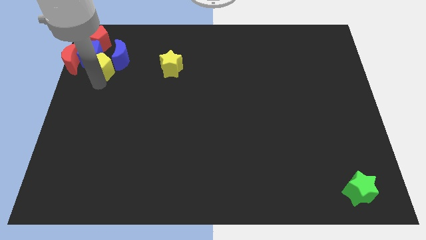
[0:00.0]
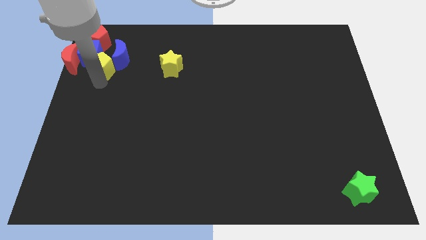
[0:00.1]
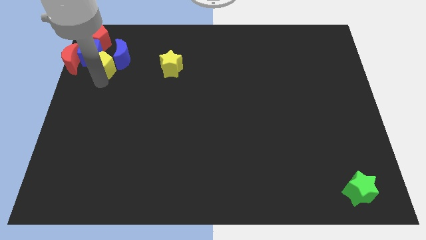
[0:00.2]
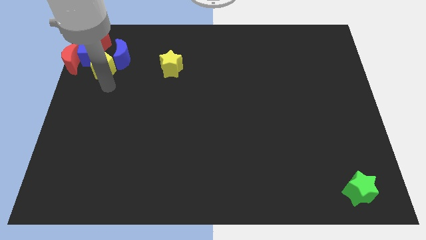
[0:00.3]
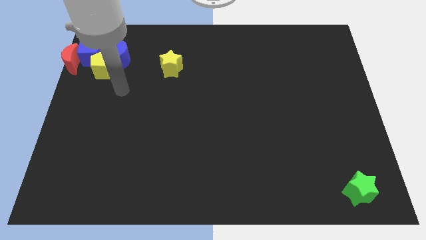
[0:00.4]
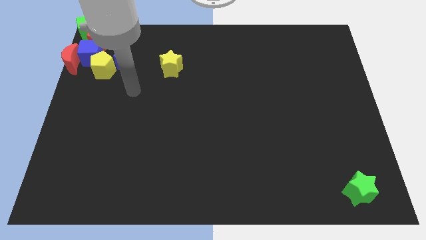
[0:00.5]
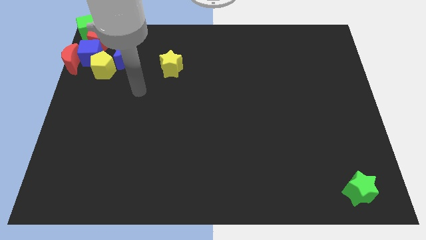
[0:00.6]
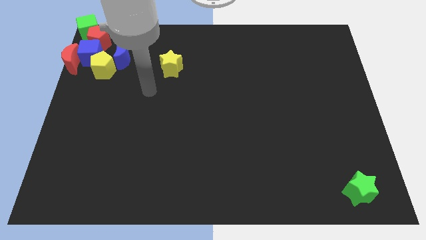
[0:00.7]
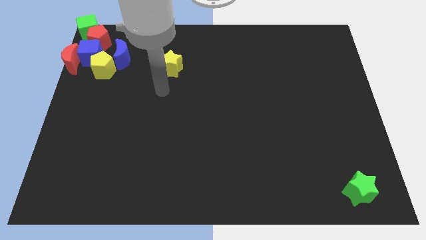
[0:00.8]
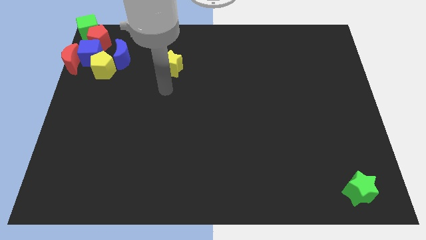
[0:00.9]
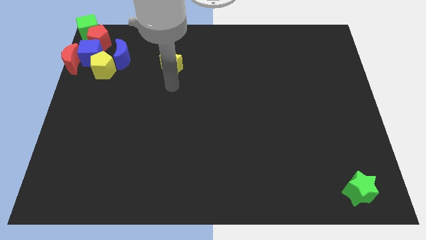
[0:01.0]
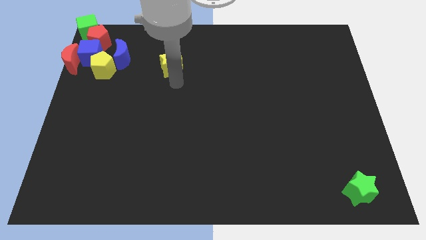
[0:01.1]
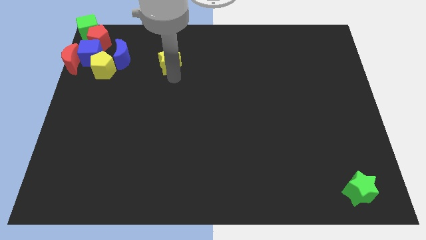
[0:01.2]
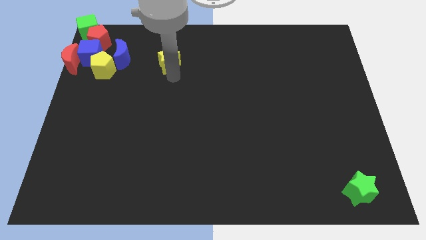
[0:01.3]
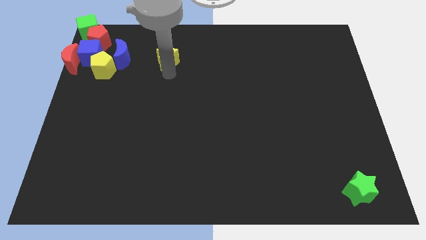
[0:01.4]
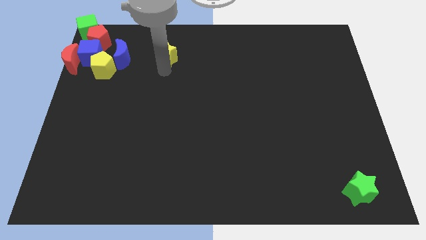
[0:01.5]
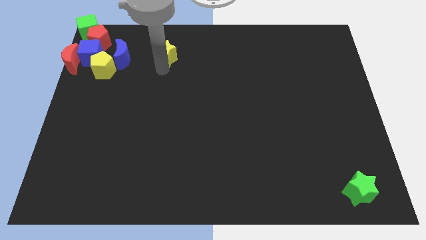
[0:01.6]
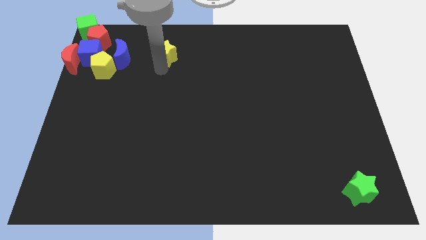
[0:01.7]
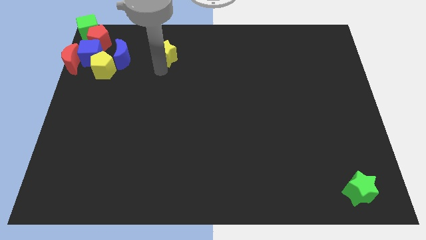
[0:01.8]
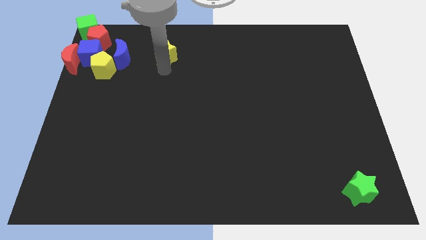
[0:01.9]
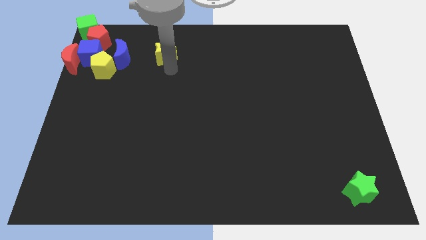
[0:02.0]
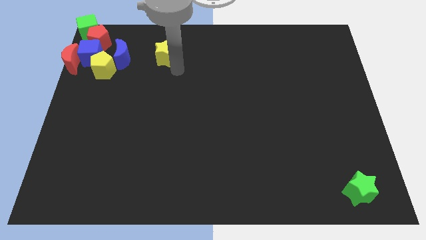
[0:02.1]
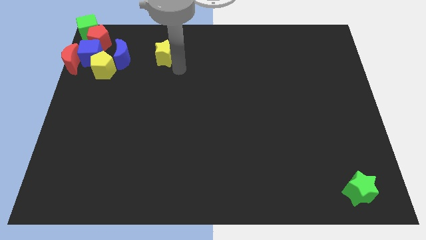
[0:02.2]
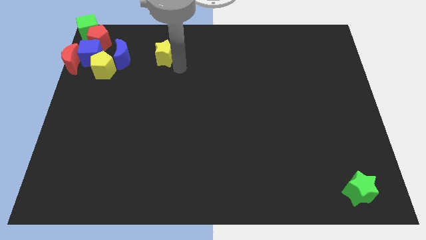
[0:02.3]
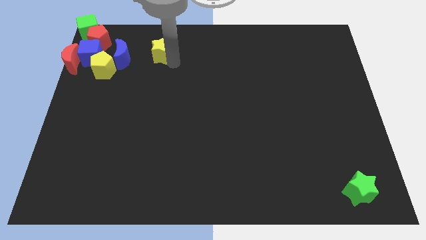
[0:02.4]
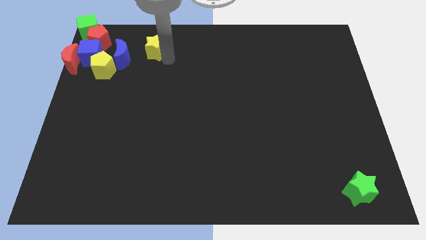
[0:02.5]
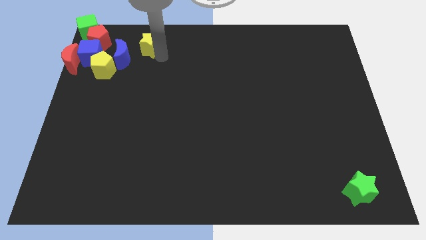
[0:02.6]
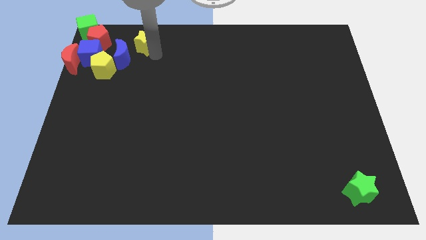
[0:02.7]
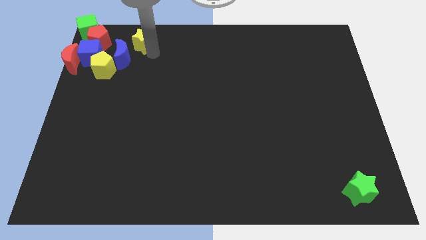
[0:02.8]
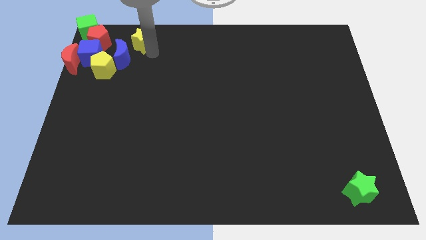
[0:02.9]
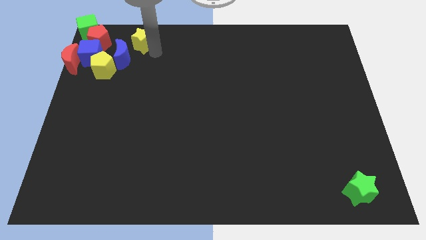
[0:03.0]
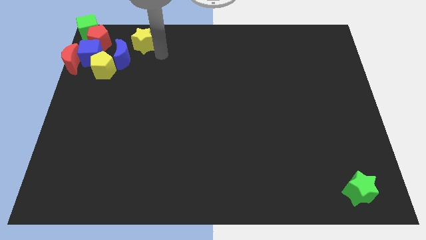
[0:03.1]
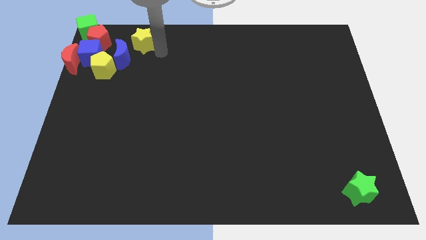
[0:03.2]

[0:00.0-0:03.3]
move the yellow star close to the blue moon

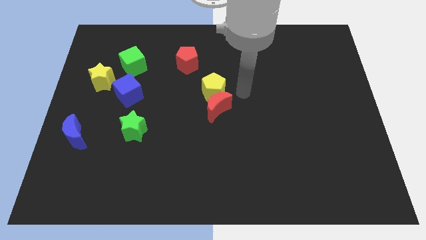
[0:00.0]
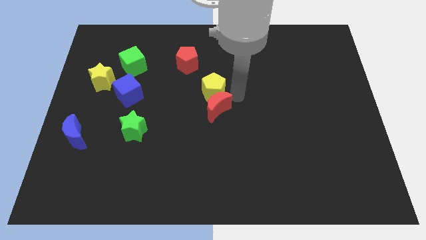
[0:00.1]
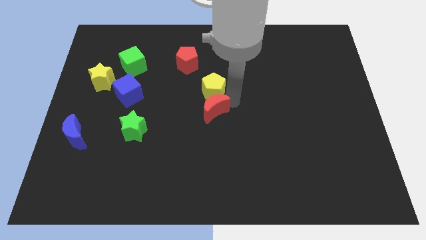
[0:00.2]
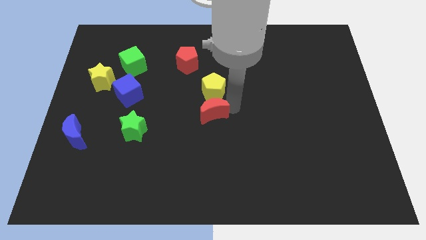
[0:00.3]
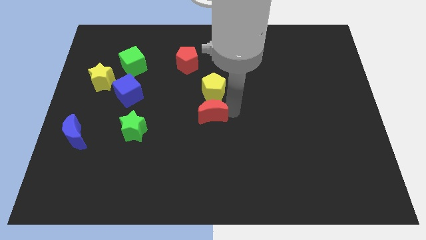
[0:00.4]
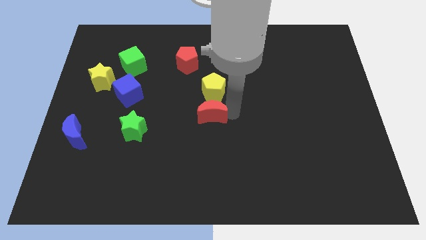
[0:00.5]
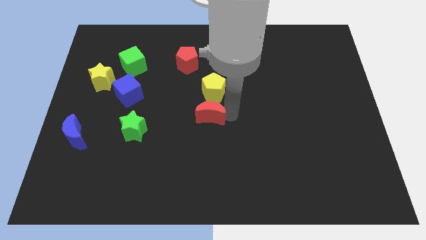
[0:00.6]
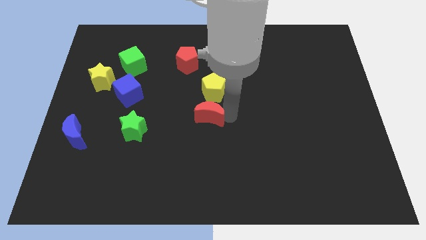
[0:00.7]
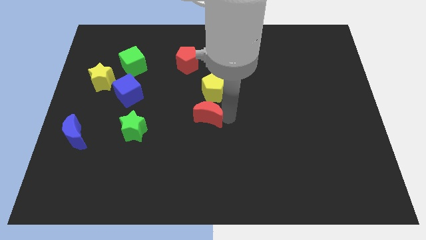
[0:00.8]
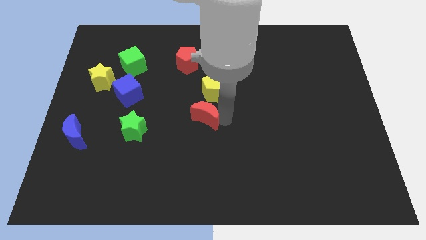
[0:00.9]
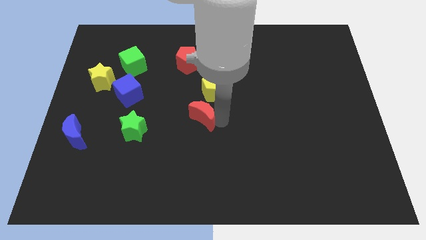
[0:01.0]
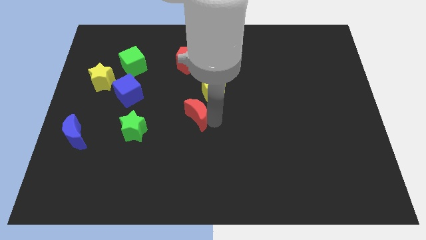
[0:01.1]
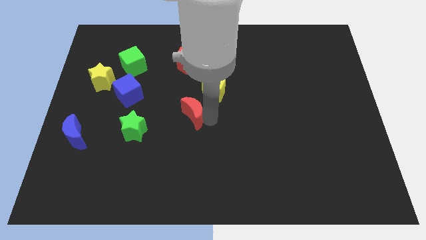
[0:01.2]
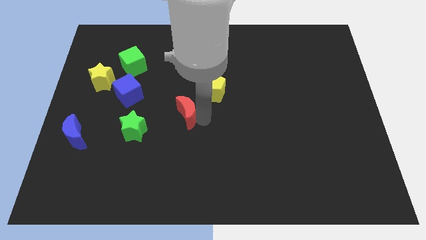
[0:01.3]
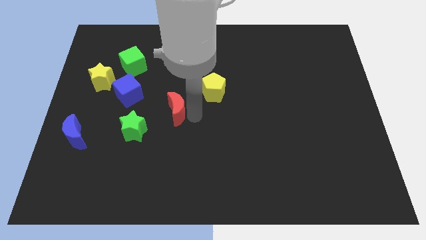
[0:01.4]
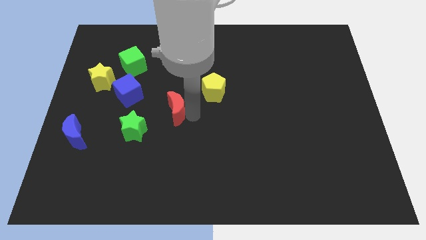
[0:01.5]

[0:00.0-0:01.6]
push the red crescent towards the green star

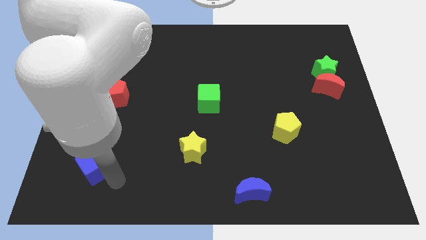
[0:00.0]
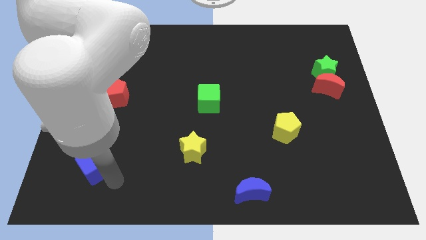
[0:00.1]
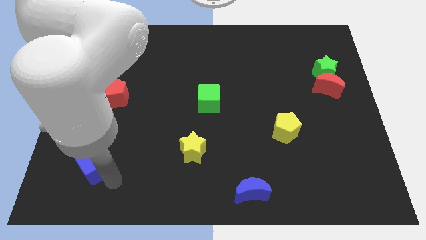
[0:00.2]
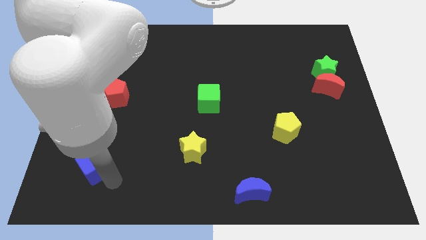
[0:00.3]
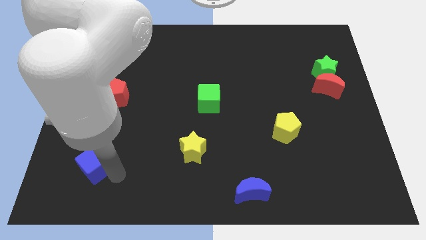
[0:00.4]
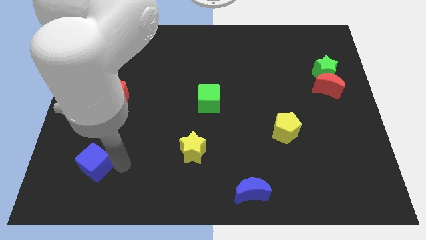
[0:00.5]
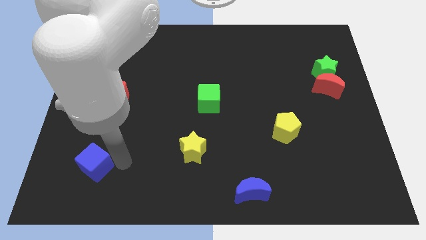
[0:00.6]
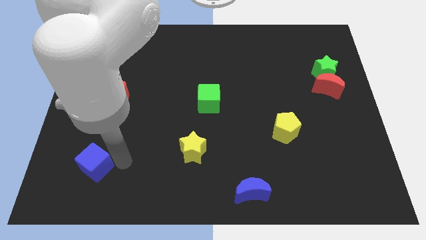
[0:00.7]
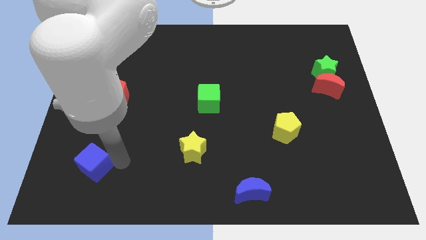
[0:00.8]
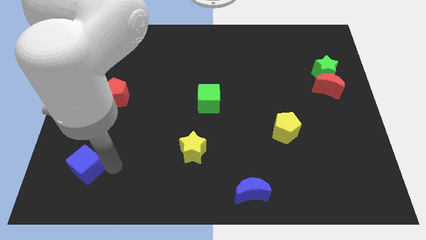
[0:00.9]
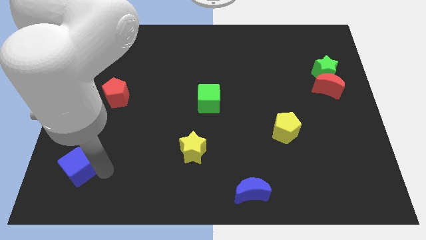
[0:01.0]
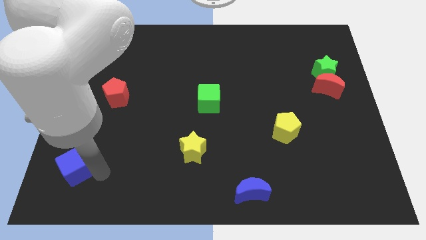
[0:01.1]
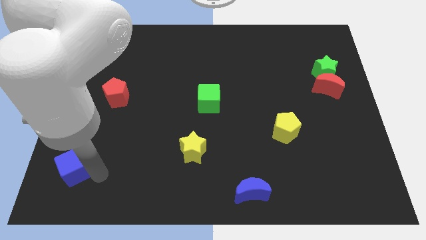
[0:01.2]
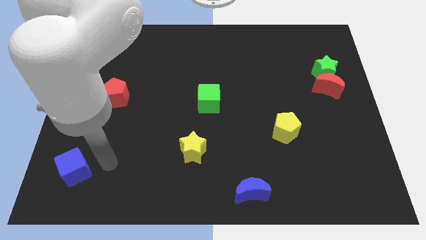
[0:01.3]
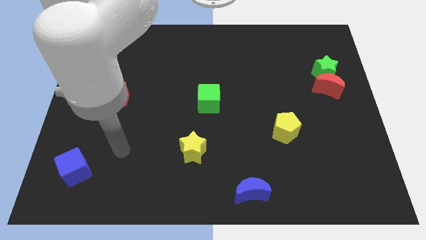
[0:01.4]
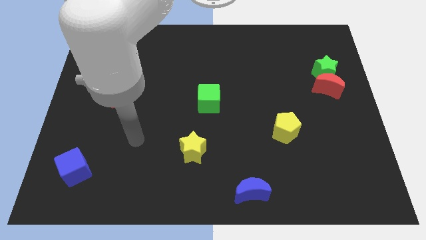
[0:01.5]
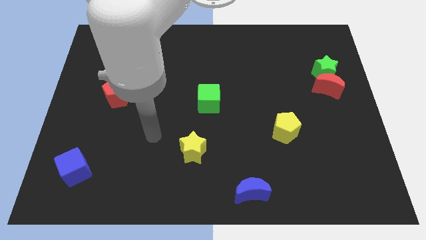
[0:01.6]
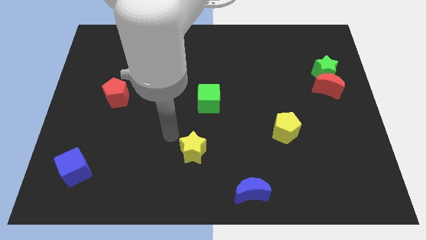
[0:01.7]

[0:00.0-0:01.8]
place the blue square at the bottom left side of the board

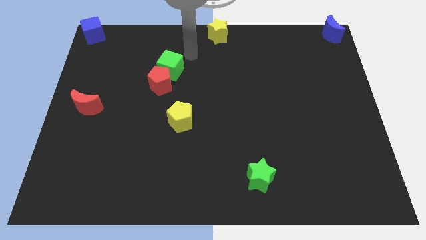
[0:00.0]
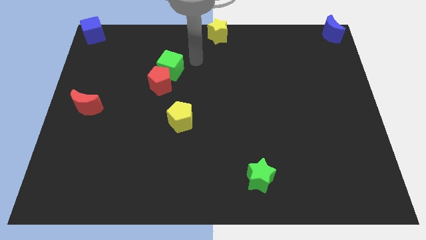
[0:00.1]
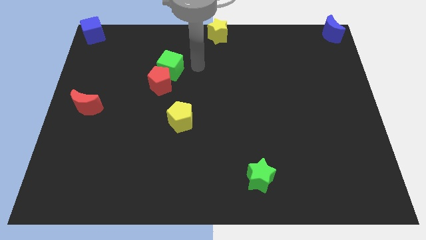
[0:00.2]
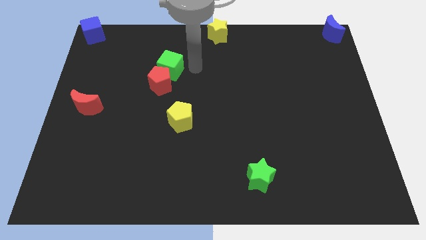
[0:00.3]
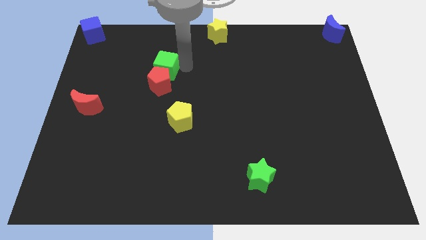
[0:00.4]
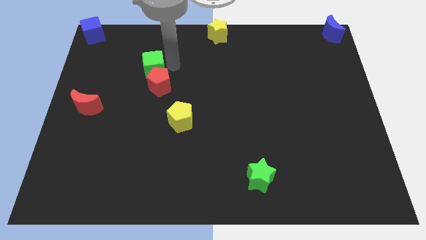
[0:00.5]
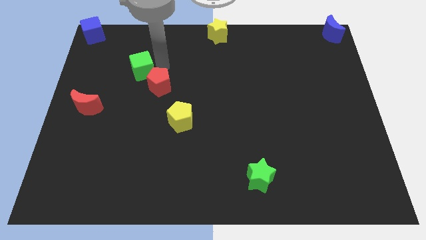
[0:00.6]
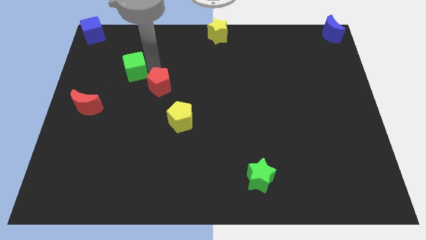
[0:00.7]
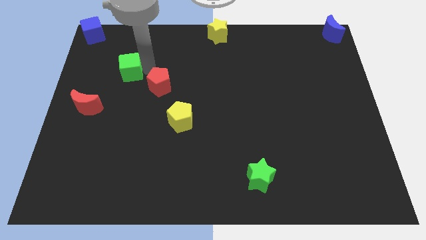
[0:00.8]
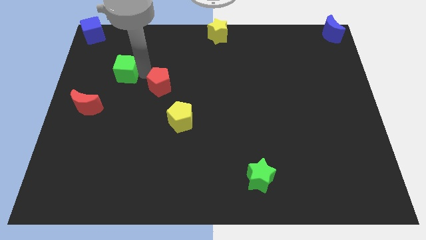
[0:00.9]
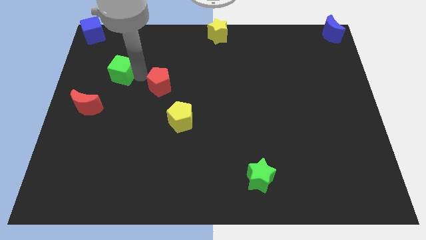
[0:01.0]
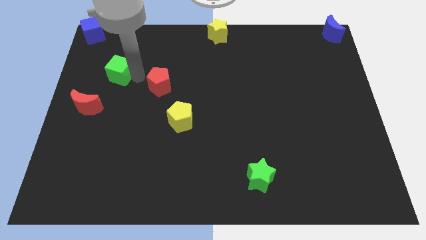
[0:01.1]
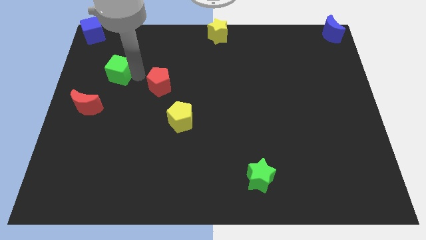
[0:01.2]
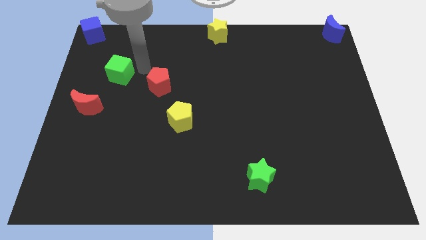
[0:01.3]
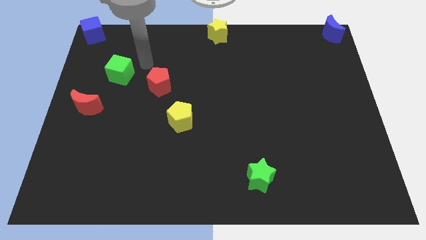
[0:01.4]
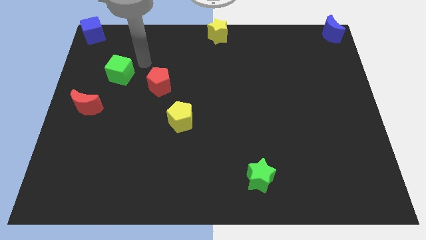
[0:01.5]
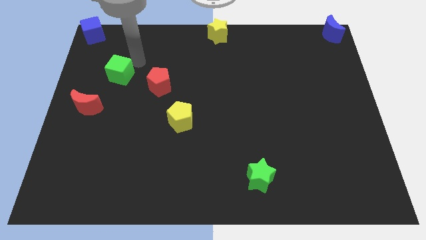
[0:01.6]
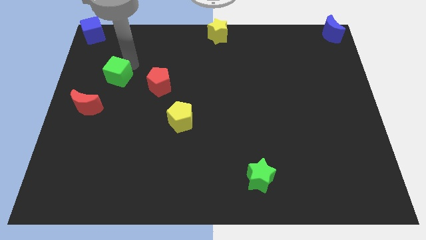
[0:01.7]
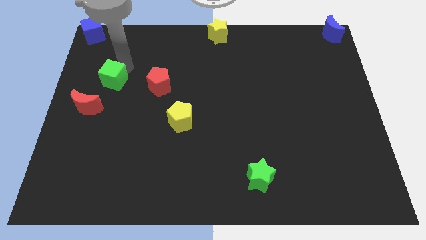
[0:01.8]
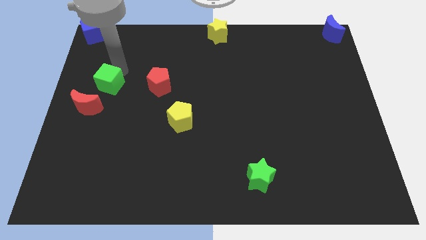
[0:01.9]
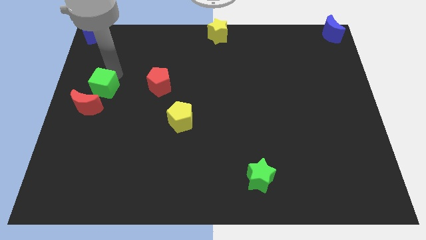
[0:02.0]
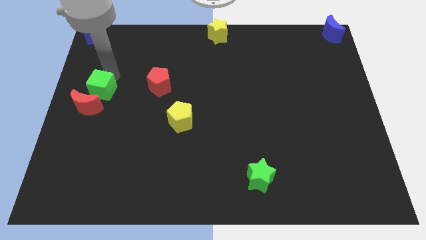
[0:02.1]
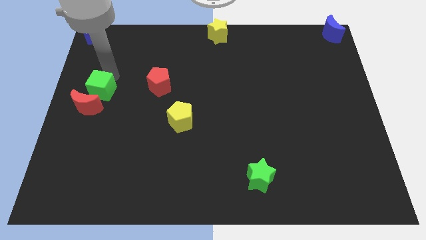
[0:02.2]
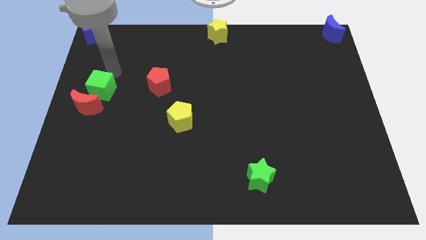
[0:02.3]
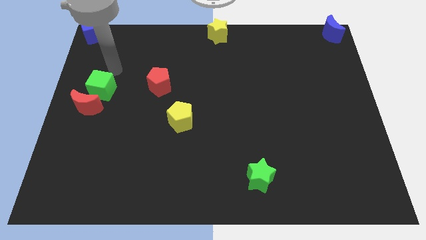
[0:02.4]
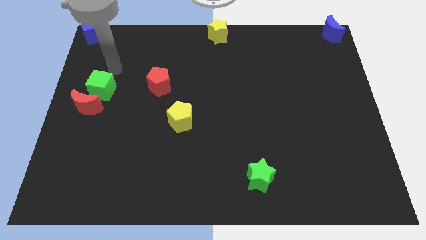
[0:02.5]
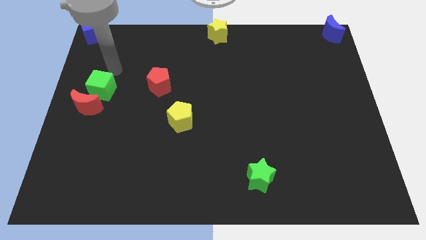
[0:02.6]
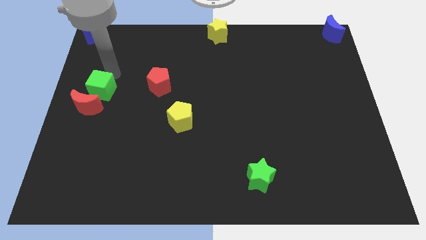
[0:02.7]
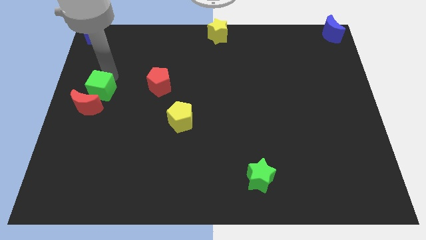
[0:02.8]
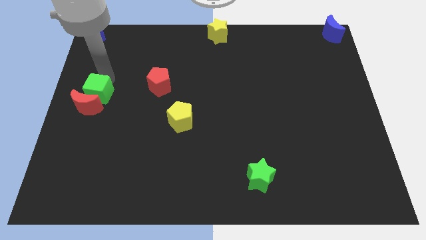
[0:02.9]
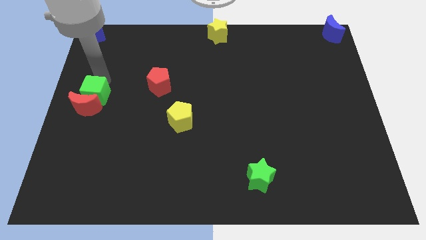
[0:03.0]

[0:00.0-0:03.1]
push the green cube toward the red crescent
